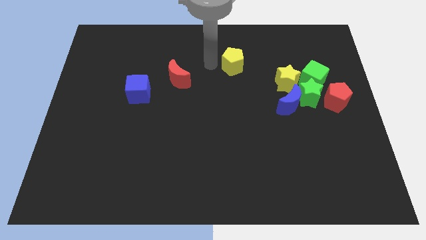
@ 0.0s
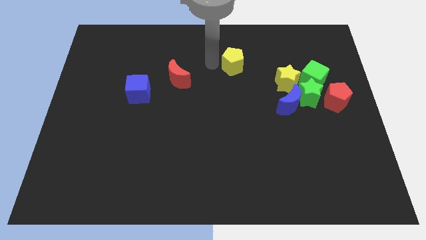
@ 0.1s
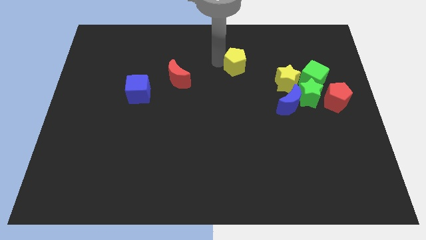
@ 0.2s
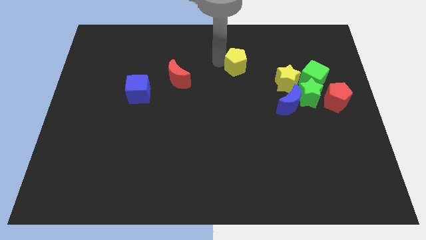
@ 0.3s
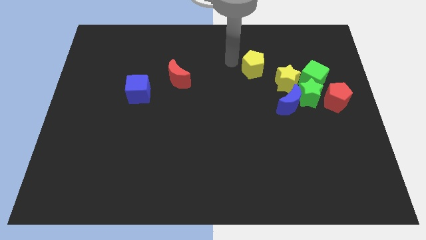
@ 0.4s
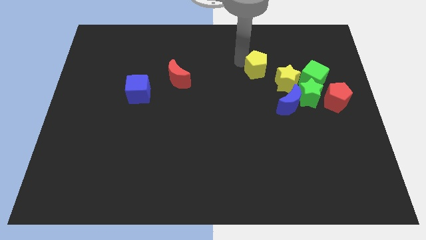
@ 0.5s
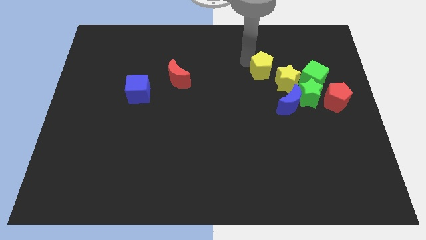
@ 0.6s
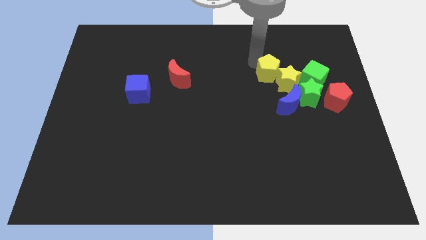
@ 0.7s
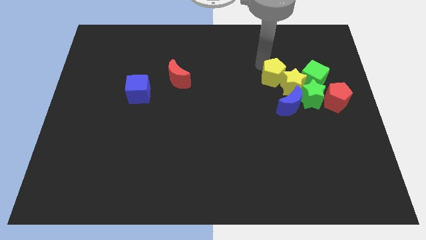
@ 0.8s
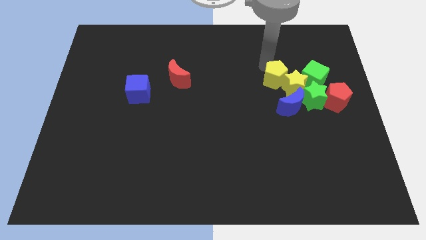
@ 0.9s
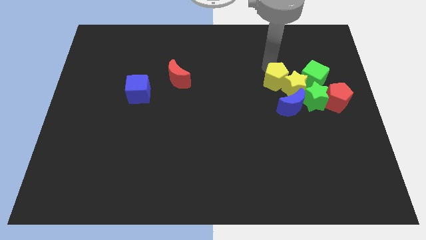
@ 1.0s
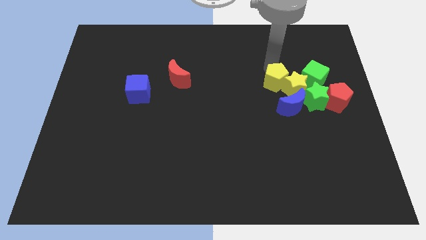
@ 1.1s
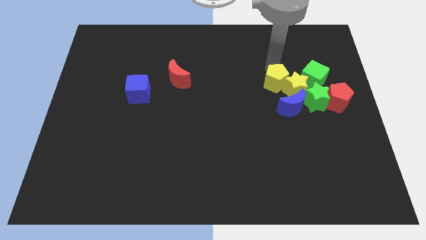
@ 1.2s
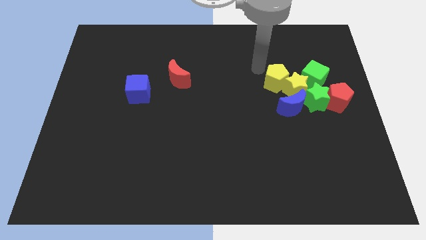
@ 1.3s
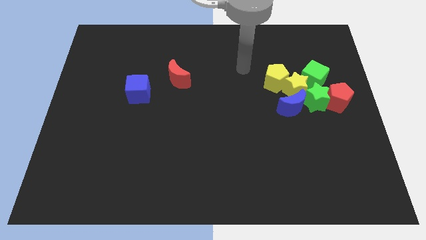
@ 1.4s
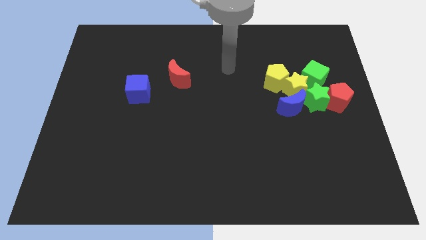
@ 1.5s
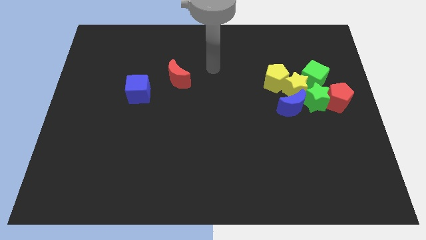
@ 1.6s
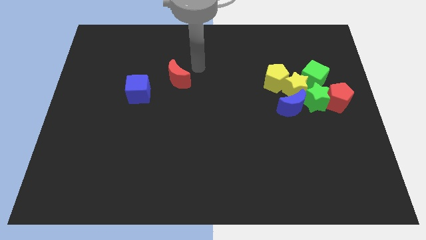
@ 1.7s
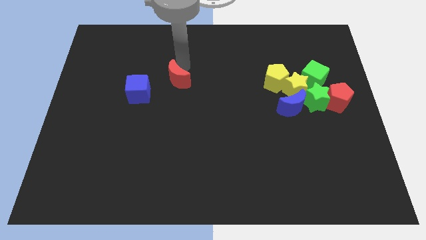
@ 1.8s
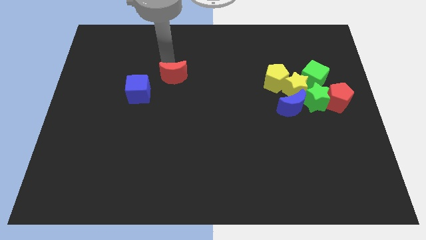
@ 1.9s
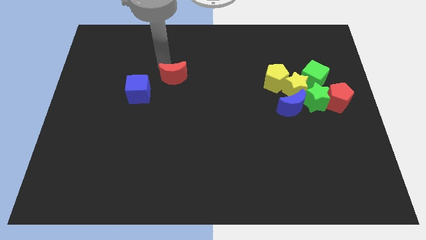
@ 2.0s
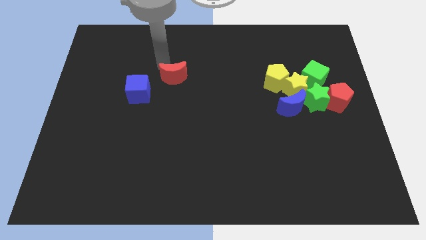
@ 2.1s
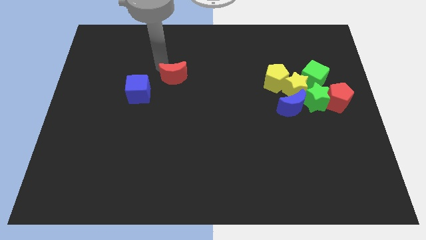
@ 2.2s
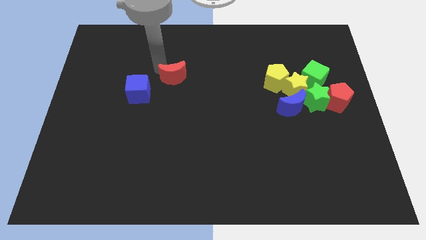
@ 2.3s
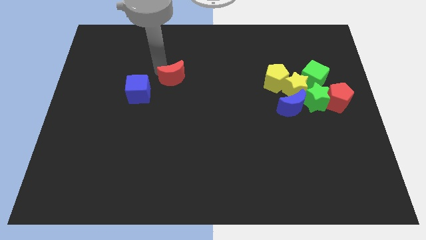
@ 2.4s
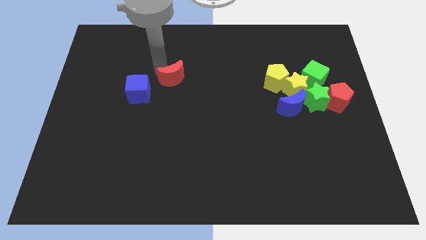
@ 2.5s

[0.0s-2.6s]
move the yellow pentagon into the yellow star

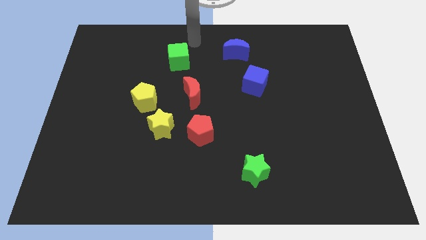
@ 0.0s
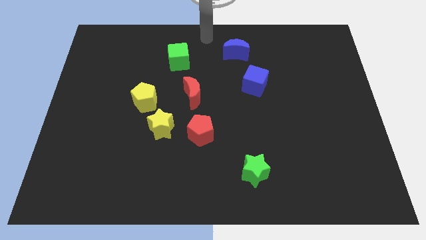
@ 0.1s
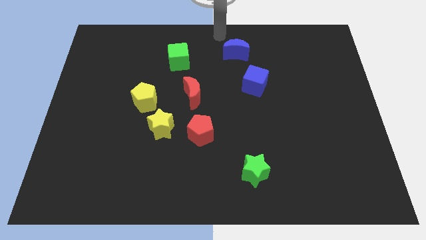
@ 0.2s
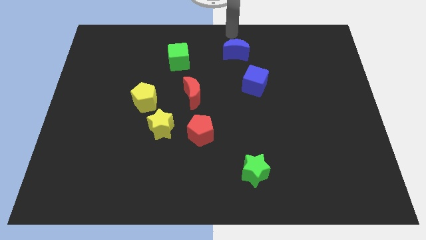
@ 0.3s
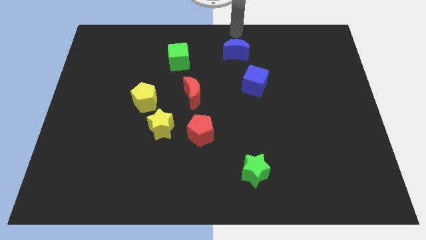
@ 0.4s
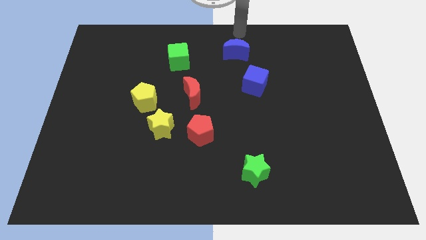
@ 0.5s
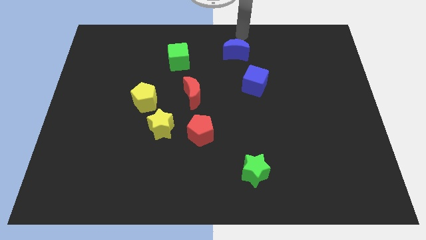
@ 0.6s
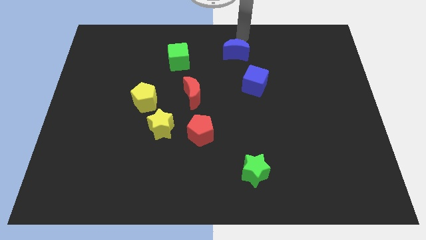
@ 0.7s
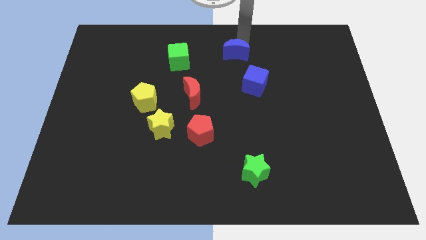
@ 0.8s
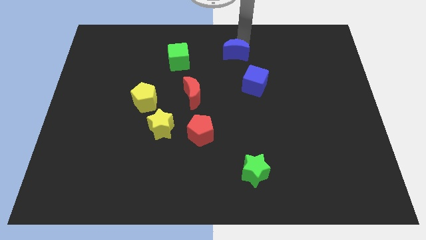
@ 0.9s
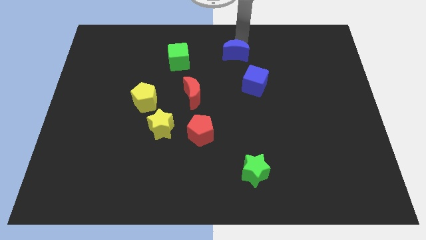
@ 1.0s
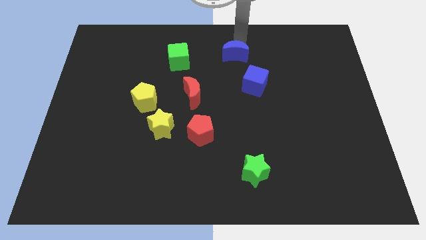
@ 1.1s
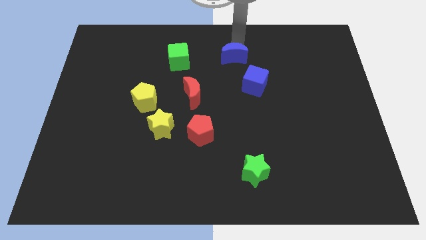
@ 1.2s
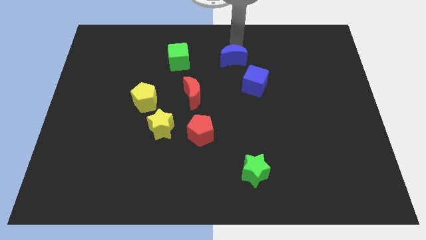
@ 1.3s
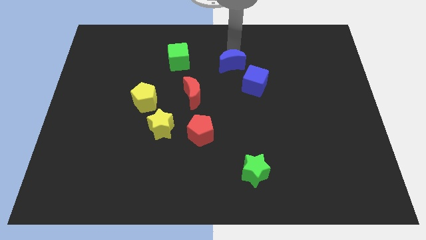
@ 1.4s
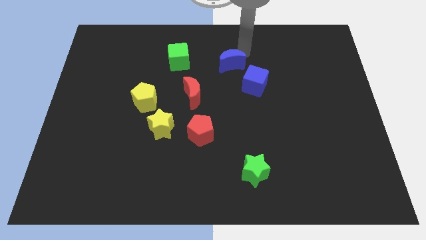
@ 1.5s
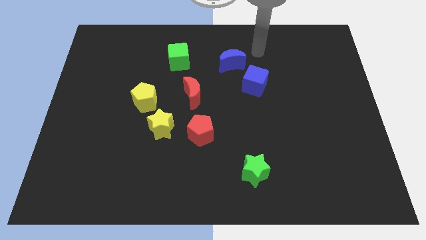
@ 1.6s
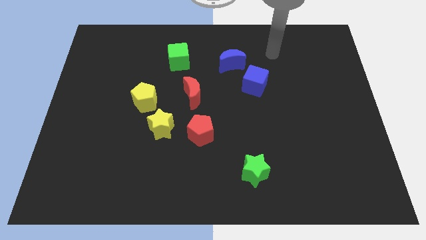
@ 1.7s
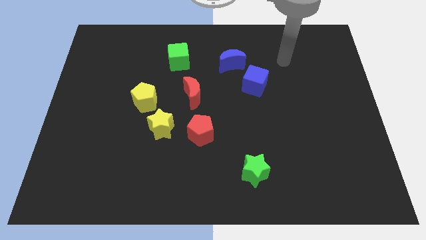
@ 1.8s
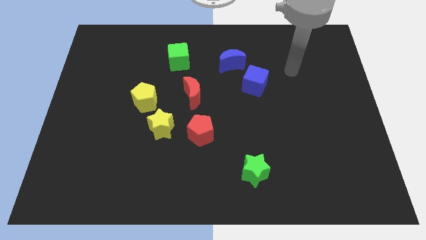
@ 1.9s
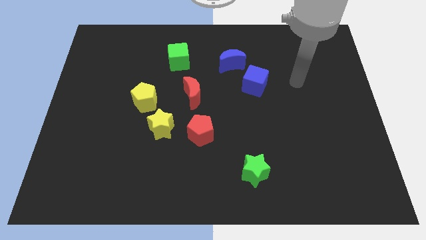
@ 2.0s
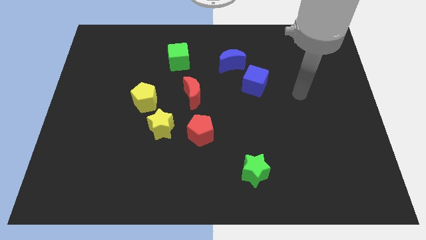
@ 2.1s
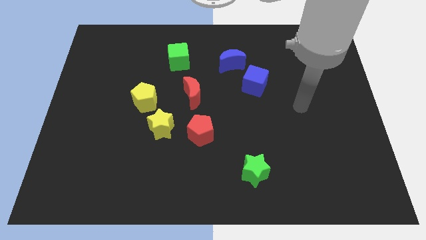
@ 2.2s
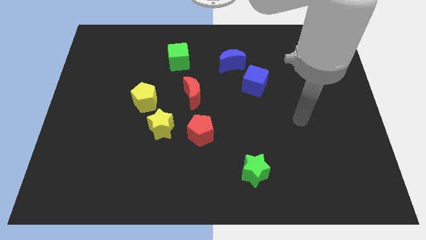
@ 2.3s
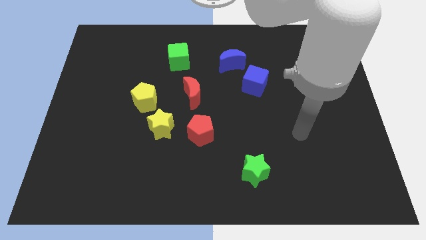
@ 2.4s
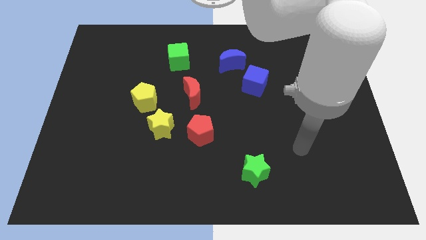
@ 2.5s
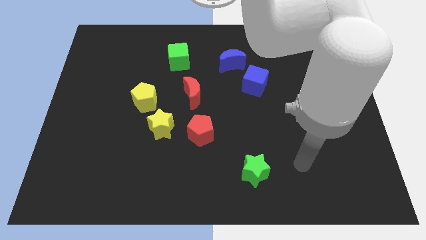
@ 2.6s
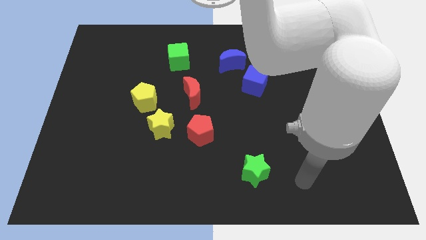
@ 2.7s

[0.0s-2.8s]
push the blue moon downwards slightly

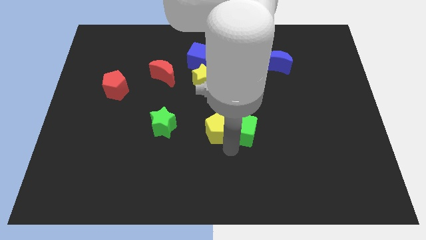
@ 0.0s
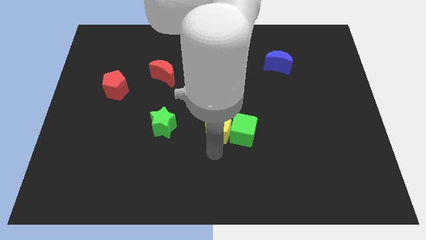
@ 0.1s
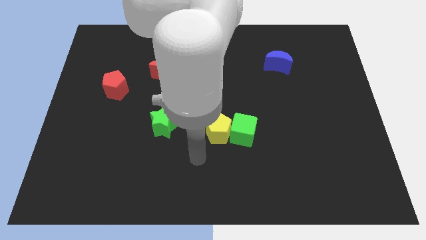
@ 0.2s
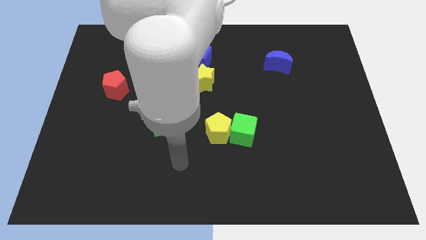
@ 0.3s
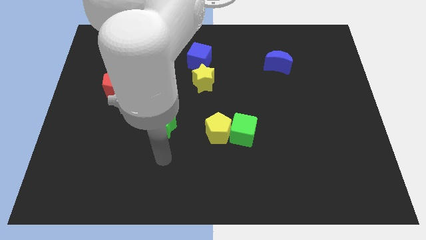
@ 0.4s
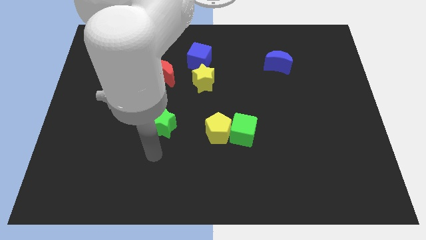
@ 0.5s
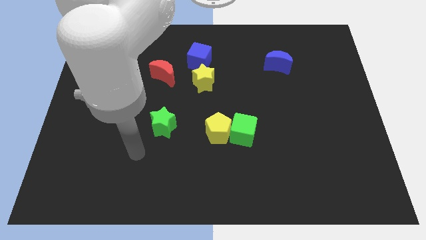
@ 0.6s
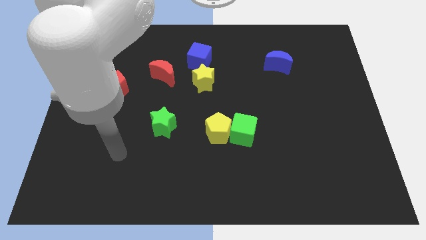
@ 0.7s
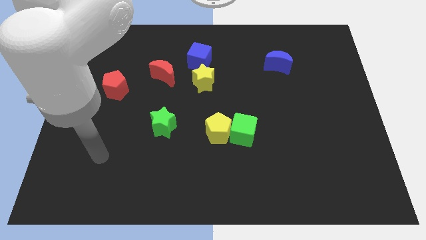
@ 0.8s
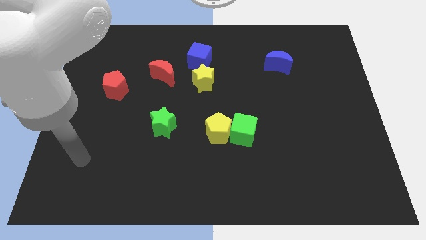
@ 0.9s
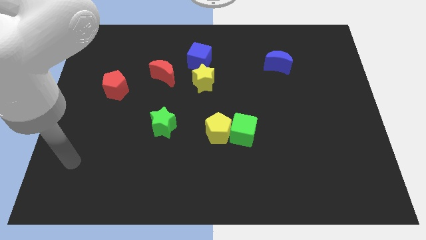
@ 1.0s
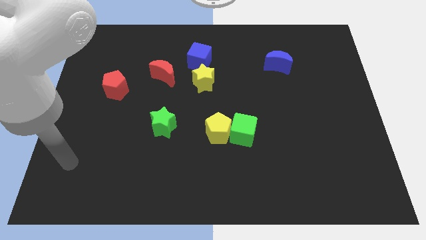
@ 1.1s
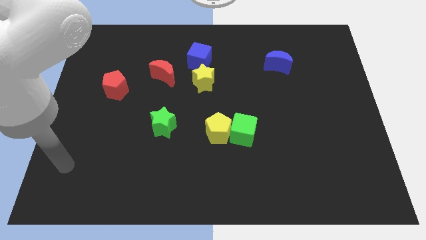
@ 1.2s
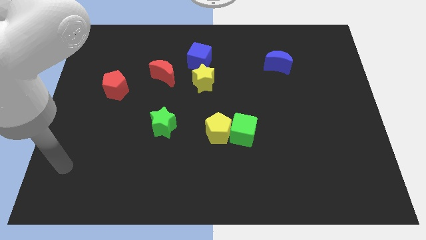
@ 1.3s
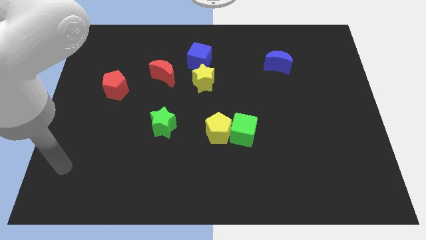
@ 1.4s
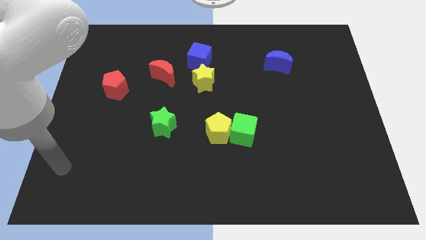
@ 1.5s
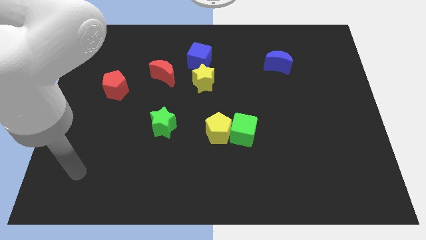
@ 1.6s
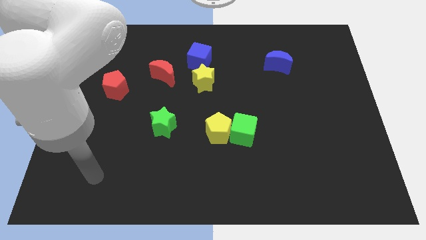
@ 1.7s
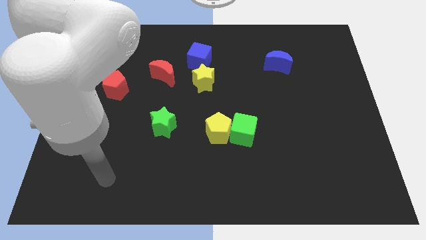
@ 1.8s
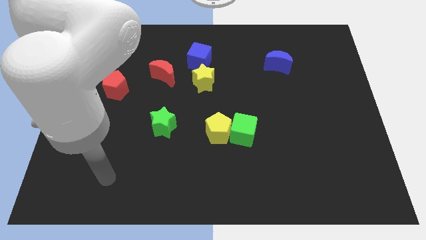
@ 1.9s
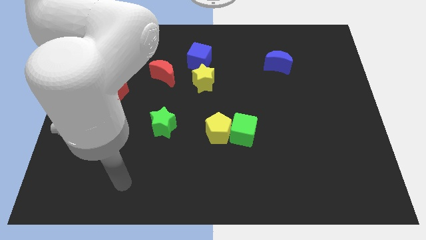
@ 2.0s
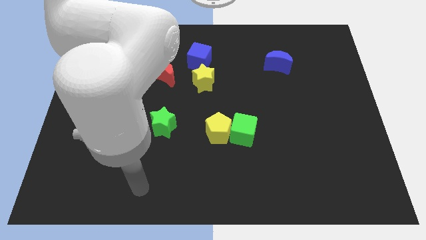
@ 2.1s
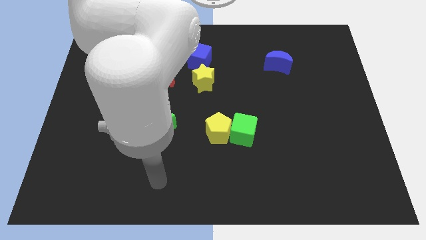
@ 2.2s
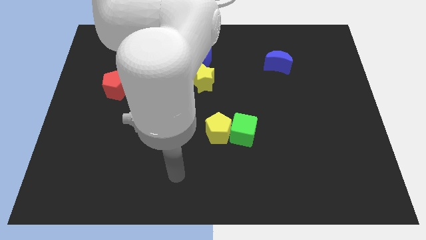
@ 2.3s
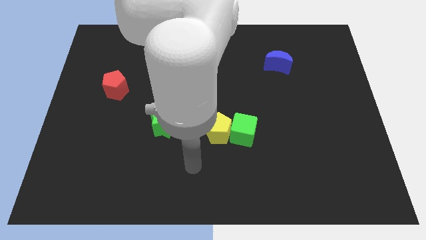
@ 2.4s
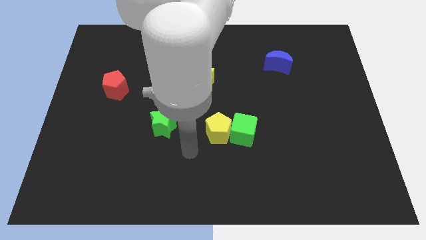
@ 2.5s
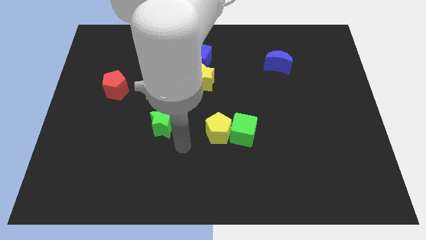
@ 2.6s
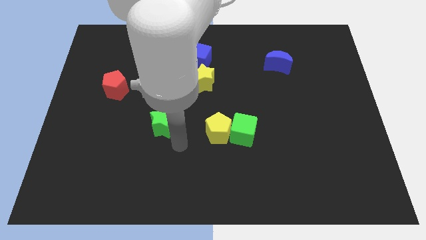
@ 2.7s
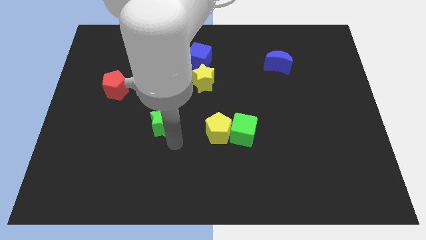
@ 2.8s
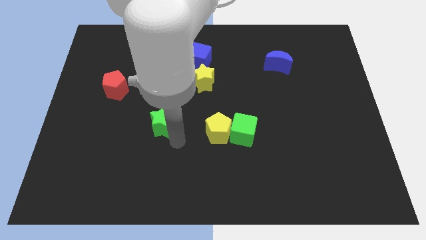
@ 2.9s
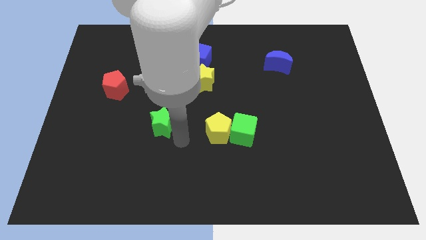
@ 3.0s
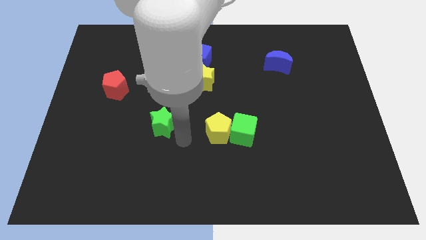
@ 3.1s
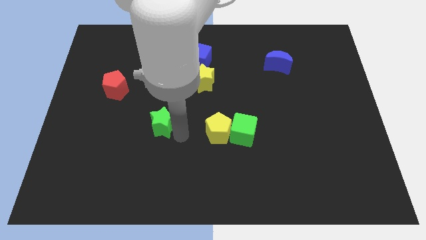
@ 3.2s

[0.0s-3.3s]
point your arm at the right of the green star

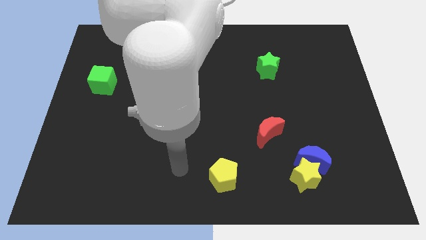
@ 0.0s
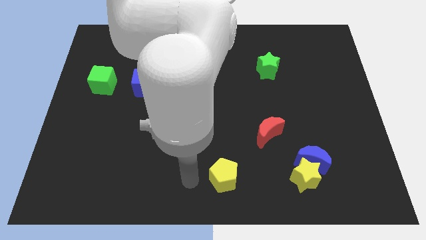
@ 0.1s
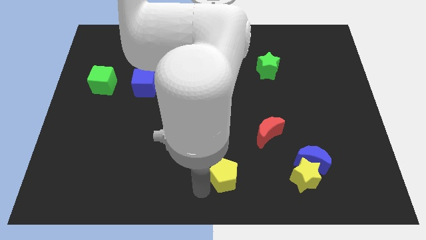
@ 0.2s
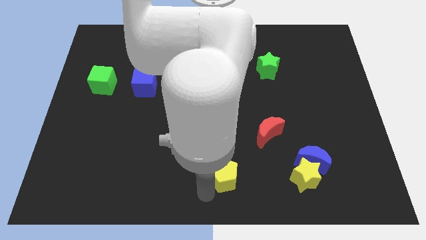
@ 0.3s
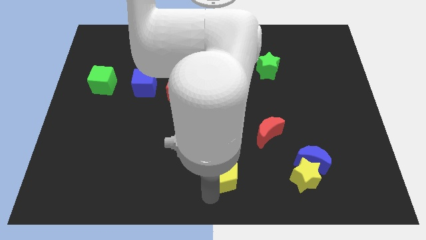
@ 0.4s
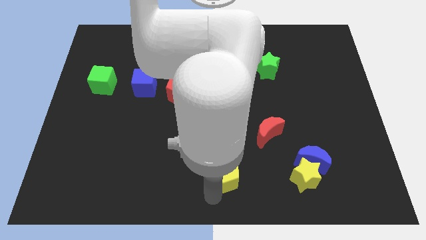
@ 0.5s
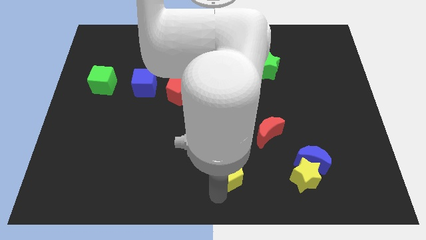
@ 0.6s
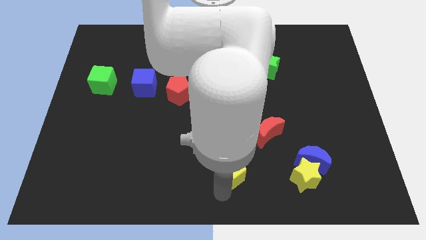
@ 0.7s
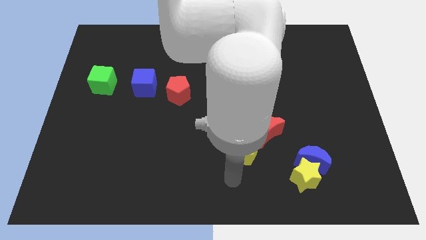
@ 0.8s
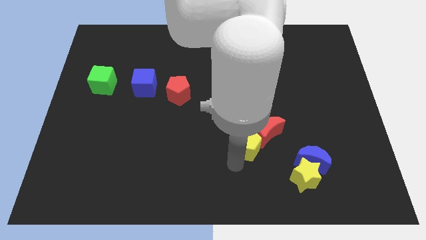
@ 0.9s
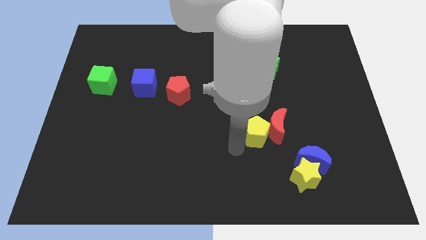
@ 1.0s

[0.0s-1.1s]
move the red crescent with the yellow pentagon
